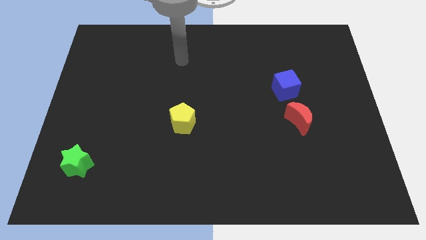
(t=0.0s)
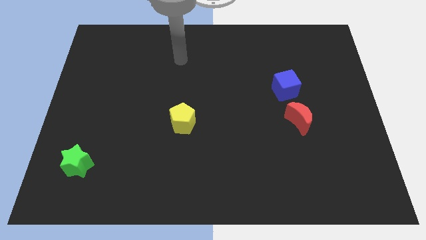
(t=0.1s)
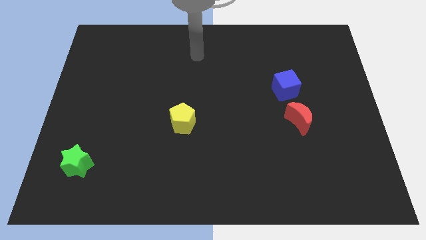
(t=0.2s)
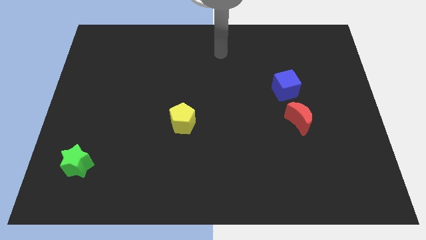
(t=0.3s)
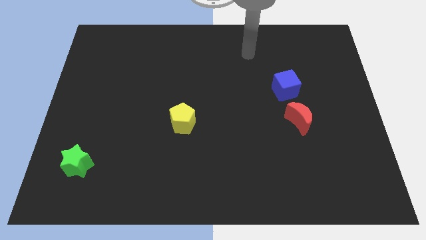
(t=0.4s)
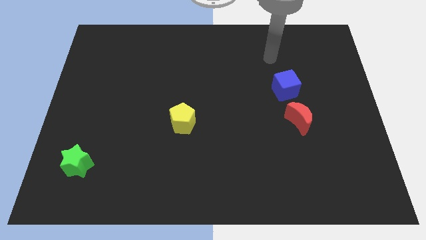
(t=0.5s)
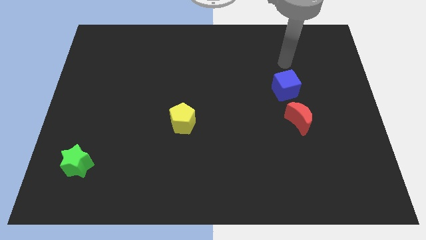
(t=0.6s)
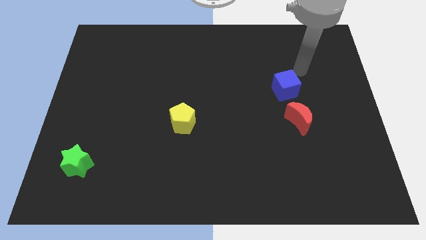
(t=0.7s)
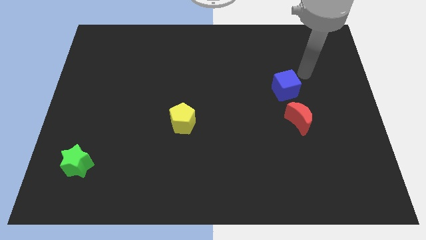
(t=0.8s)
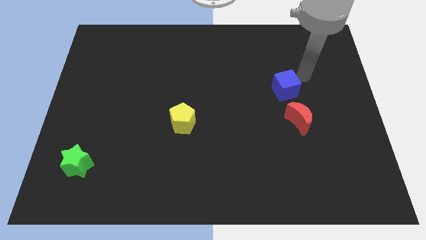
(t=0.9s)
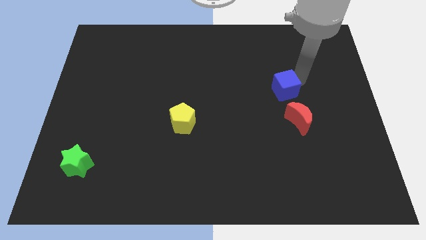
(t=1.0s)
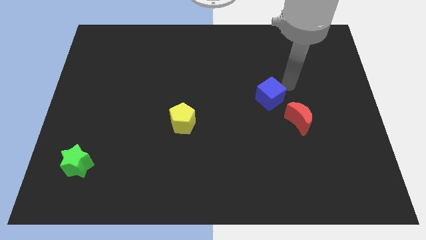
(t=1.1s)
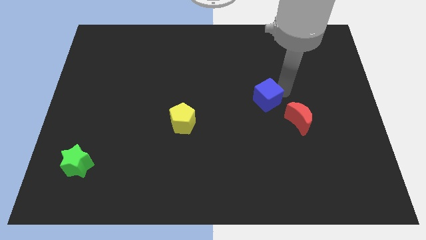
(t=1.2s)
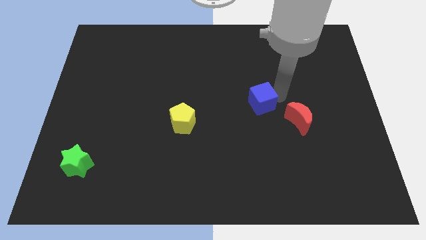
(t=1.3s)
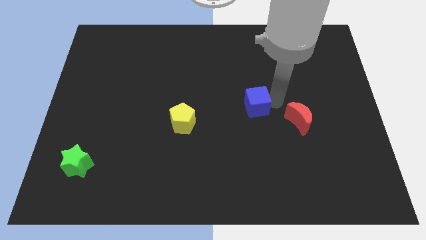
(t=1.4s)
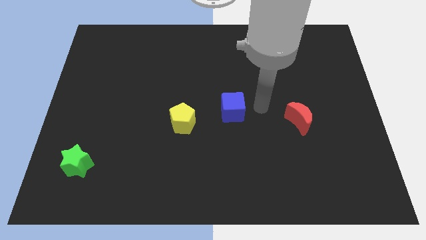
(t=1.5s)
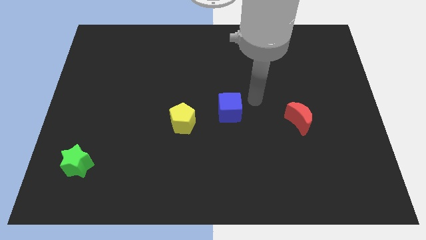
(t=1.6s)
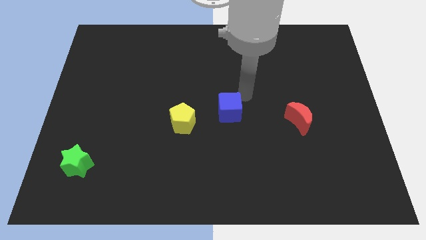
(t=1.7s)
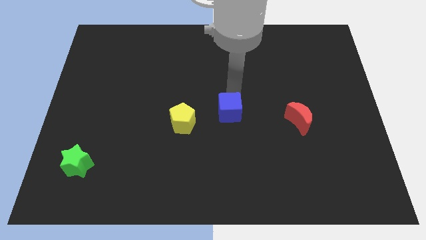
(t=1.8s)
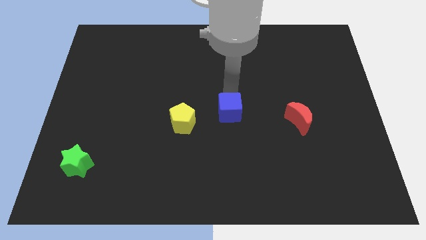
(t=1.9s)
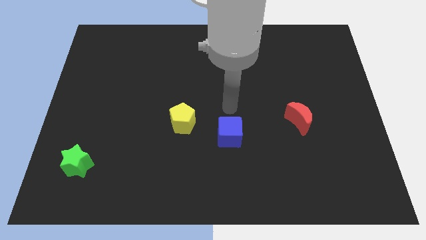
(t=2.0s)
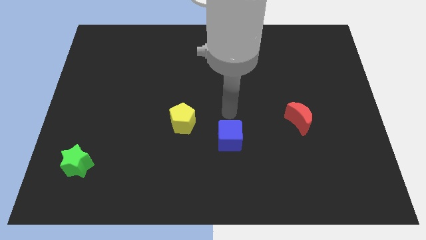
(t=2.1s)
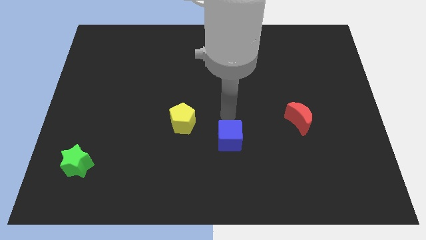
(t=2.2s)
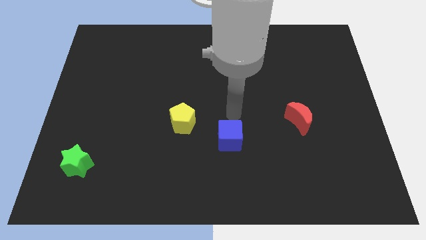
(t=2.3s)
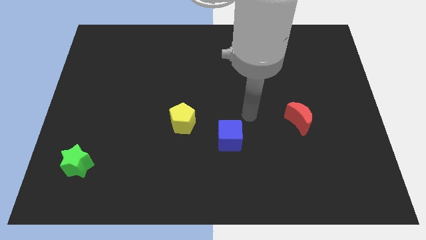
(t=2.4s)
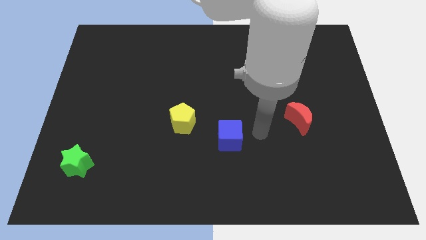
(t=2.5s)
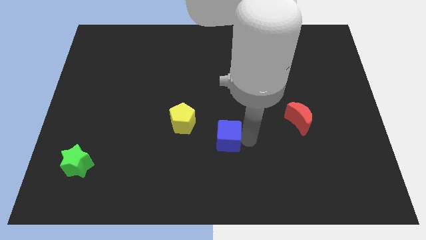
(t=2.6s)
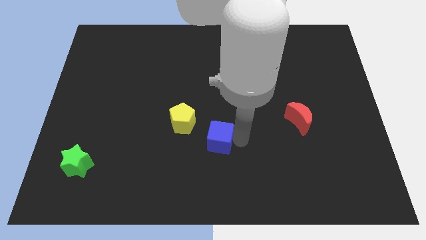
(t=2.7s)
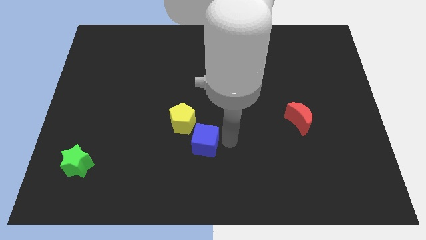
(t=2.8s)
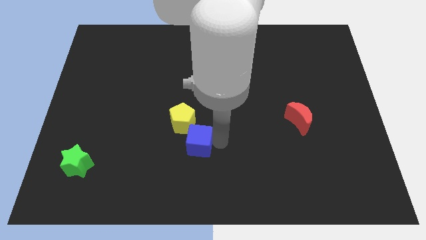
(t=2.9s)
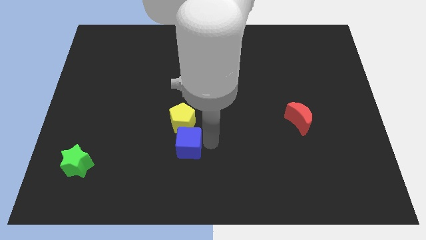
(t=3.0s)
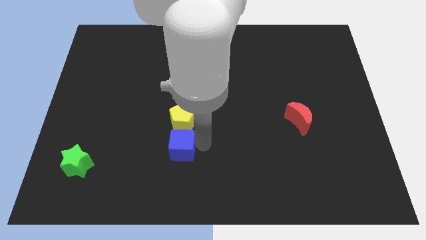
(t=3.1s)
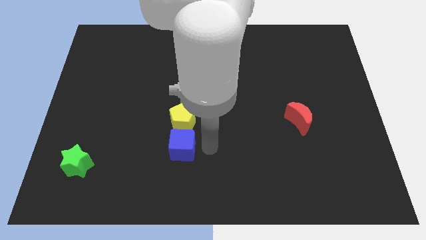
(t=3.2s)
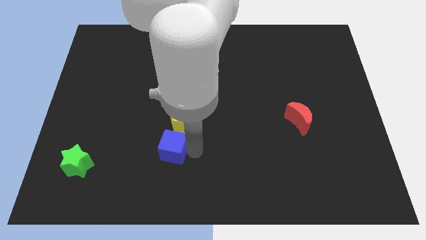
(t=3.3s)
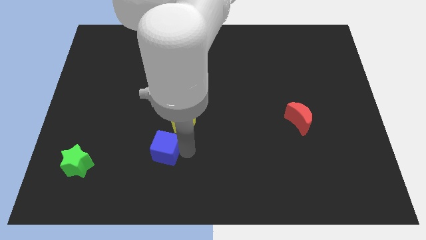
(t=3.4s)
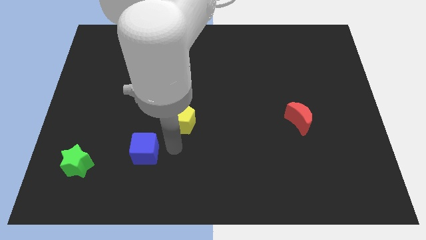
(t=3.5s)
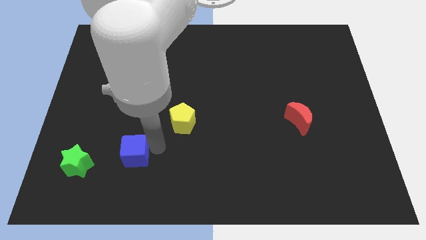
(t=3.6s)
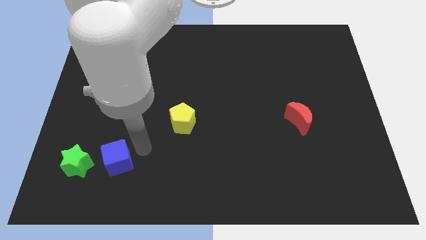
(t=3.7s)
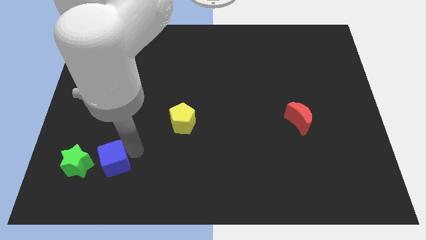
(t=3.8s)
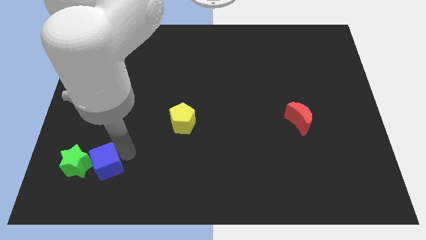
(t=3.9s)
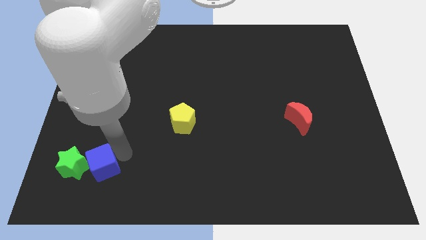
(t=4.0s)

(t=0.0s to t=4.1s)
move the cube to the star

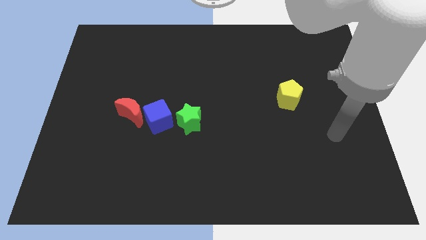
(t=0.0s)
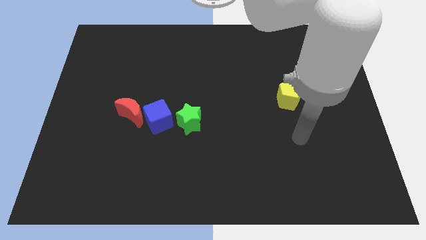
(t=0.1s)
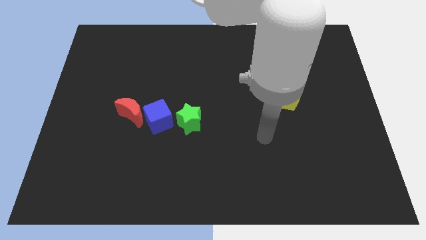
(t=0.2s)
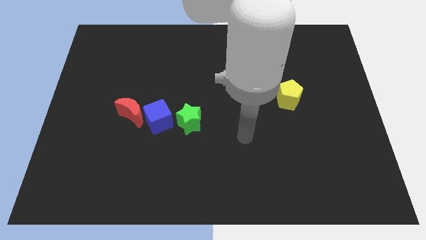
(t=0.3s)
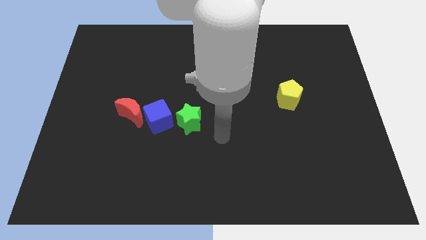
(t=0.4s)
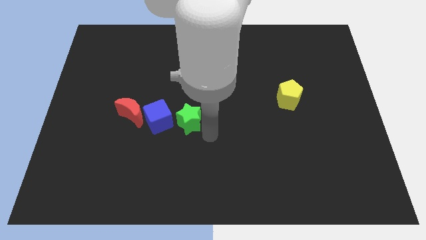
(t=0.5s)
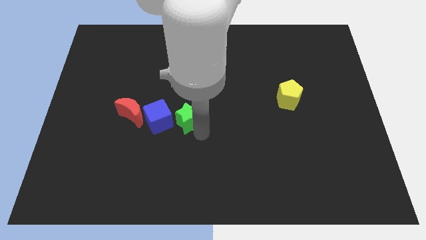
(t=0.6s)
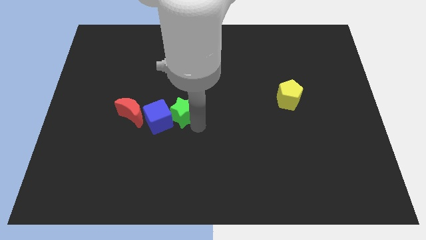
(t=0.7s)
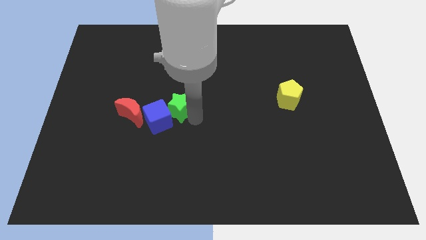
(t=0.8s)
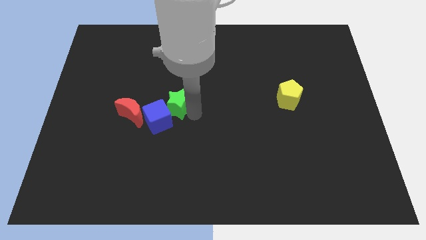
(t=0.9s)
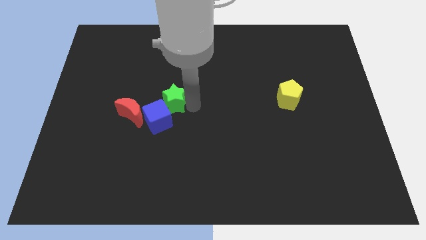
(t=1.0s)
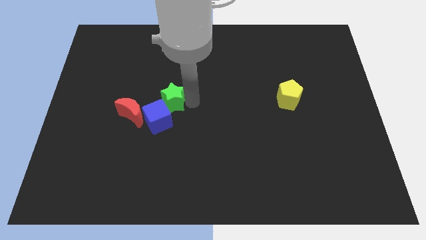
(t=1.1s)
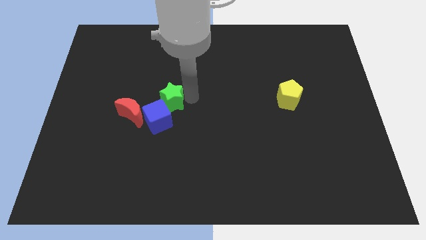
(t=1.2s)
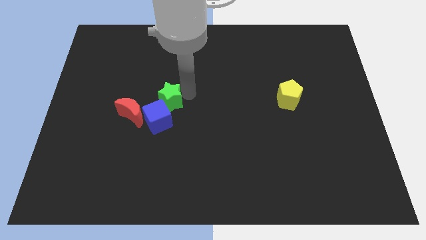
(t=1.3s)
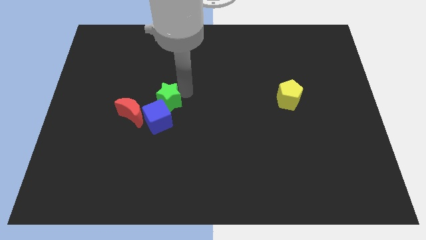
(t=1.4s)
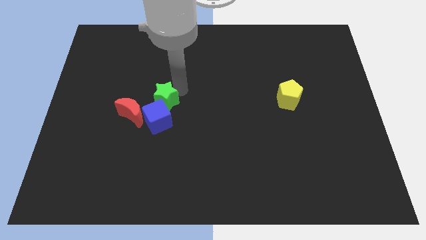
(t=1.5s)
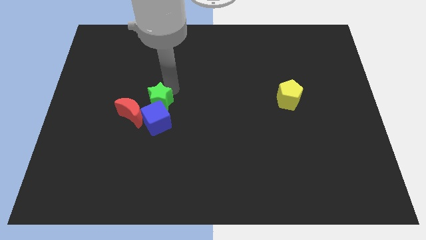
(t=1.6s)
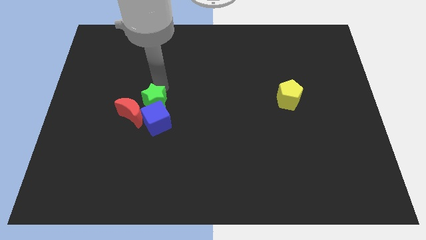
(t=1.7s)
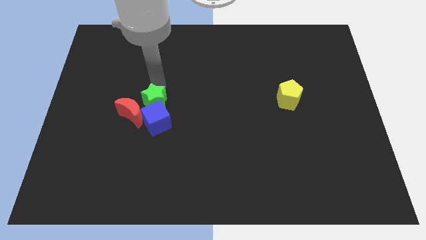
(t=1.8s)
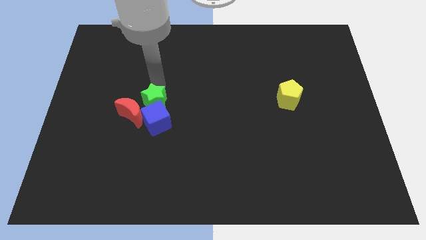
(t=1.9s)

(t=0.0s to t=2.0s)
push the star close to the red moon

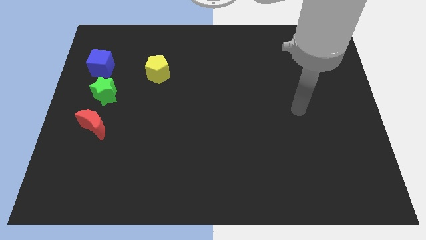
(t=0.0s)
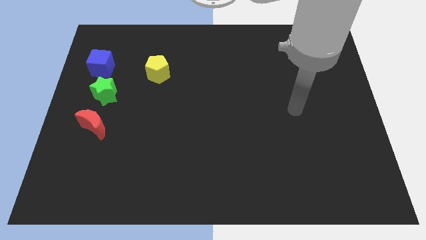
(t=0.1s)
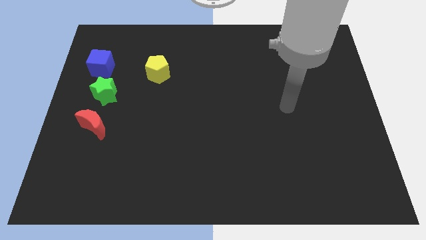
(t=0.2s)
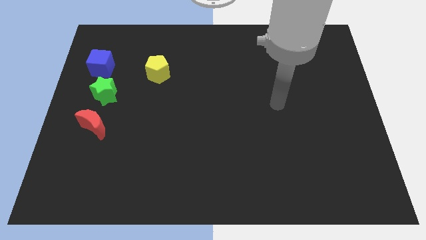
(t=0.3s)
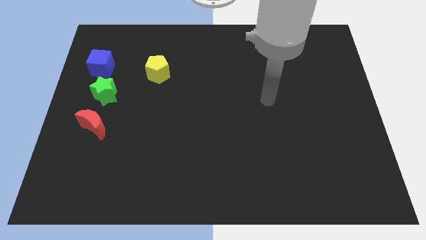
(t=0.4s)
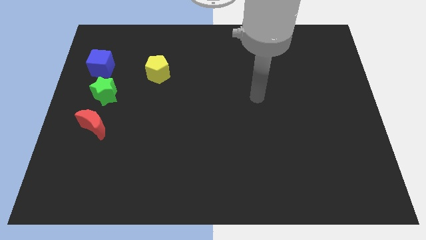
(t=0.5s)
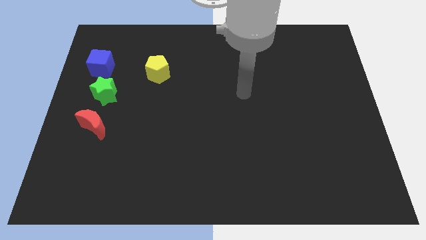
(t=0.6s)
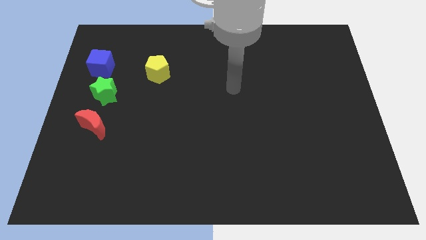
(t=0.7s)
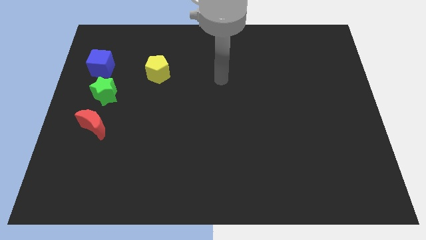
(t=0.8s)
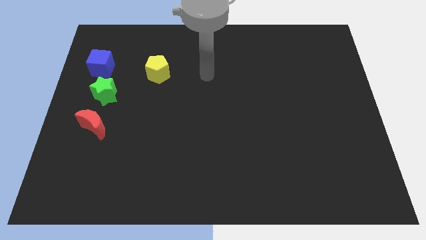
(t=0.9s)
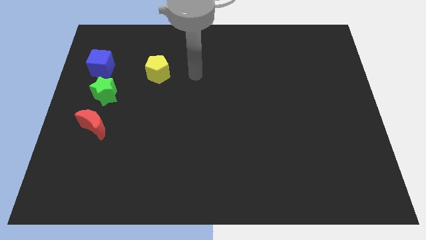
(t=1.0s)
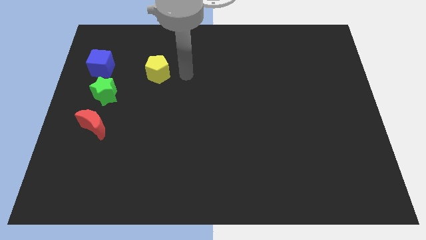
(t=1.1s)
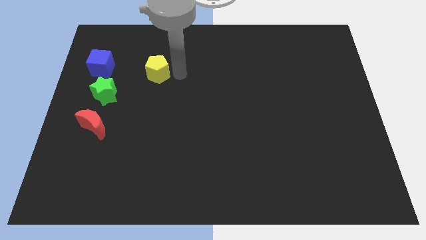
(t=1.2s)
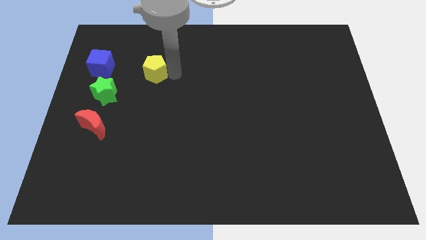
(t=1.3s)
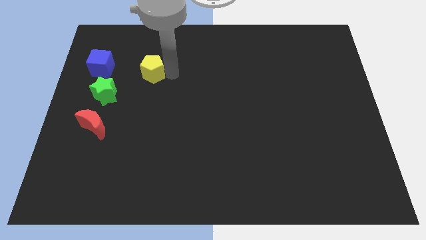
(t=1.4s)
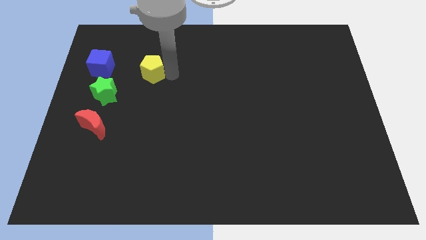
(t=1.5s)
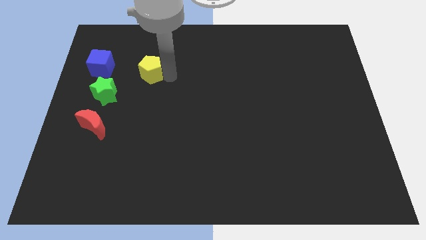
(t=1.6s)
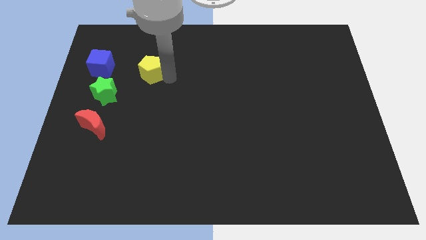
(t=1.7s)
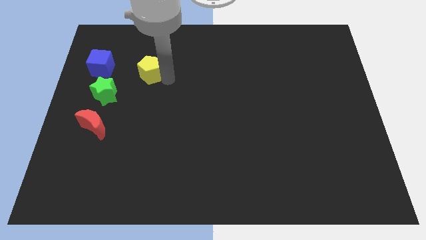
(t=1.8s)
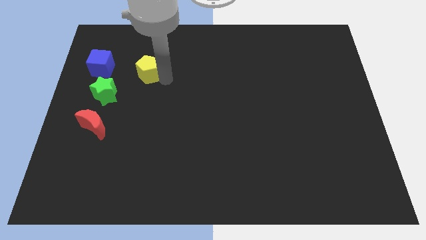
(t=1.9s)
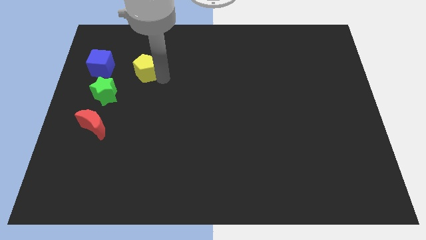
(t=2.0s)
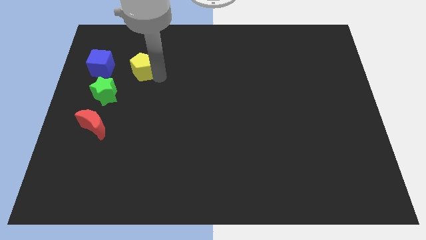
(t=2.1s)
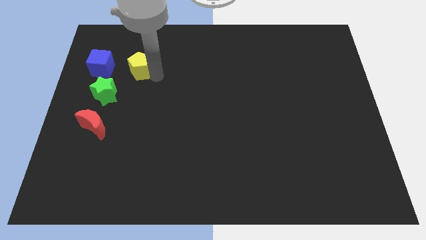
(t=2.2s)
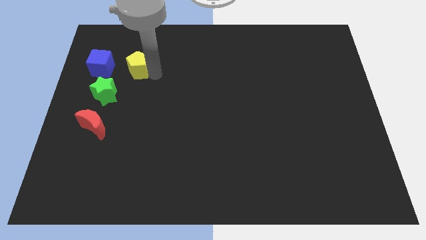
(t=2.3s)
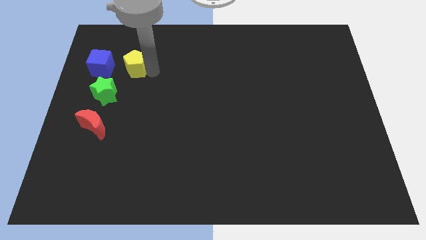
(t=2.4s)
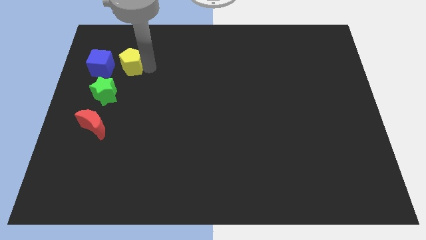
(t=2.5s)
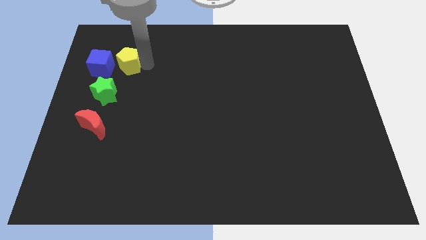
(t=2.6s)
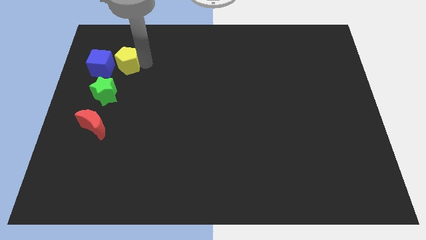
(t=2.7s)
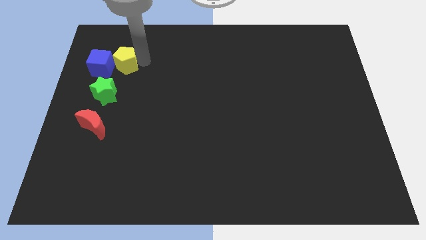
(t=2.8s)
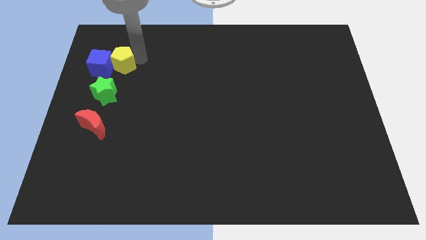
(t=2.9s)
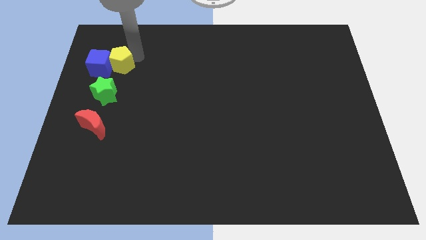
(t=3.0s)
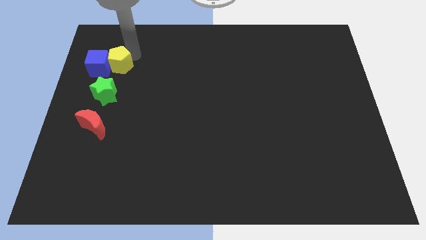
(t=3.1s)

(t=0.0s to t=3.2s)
move the yellow block next to the blue cube
